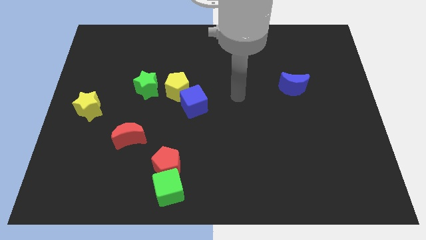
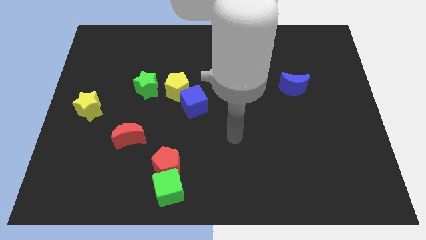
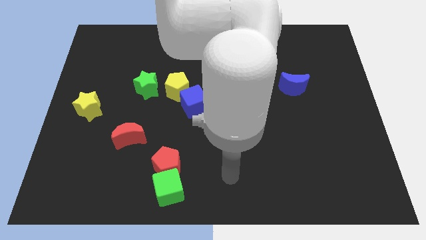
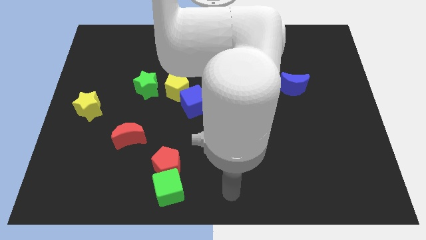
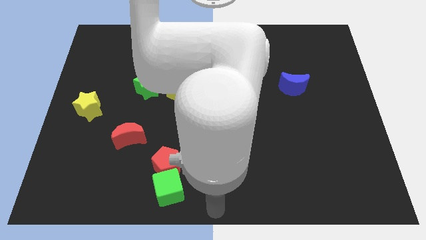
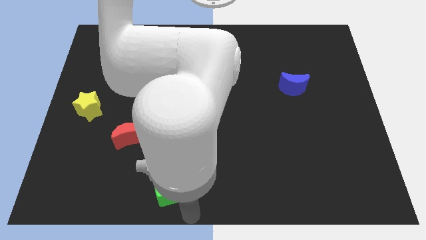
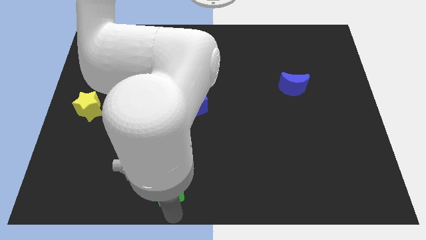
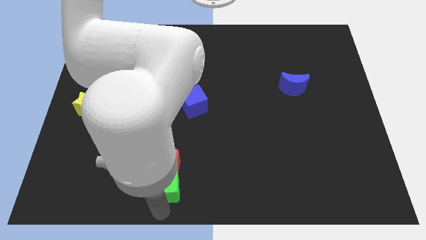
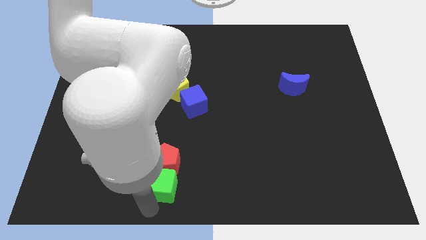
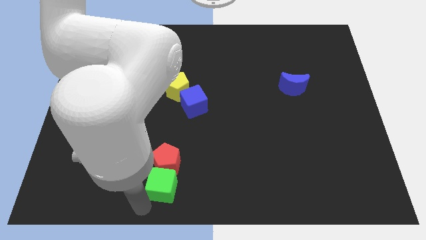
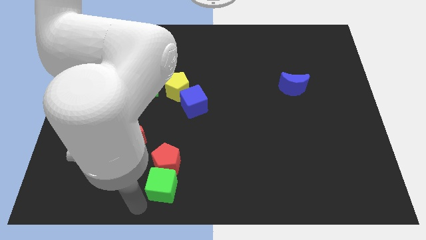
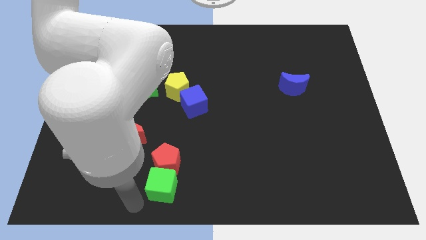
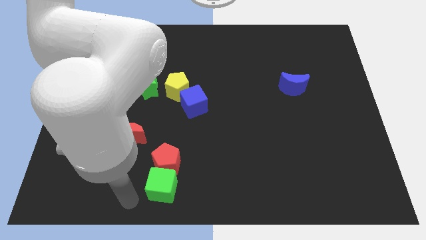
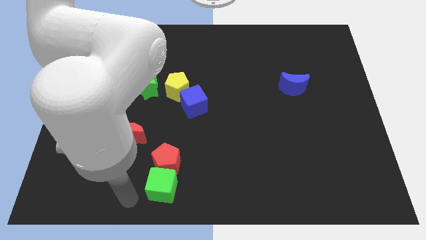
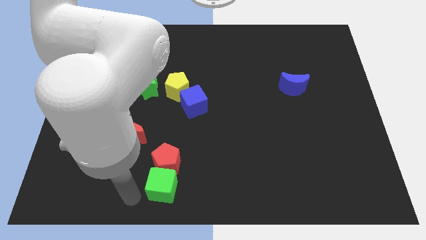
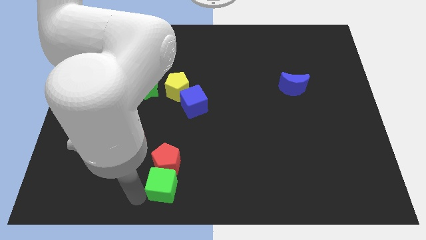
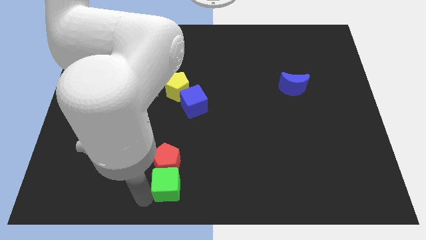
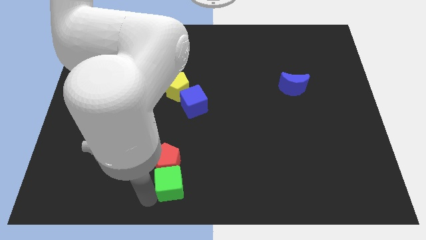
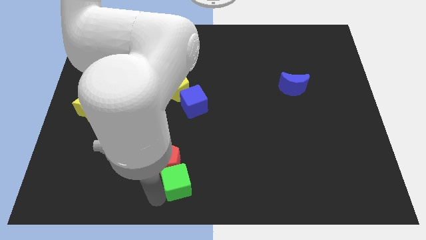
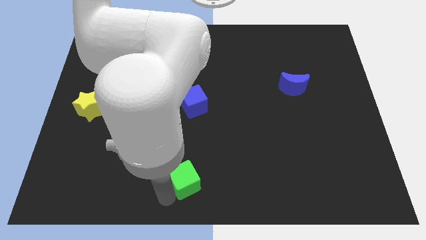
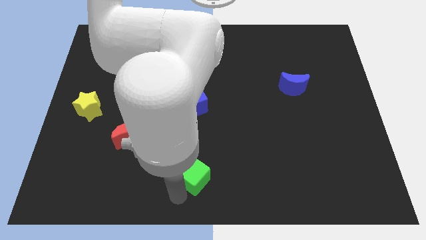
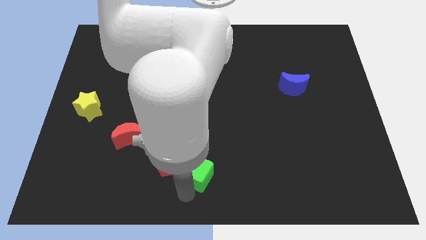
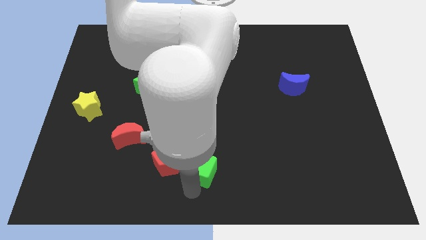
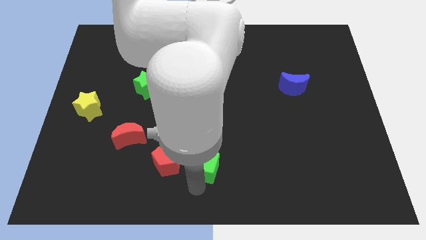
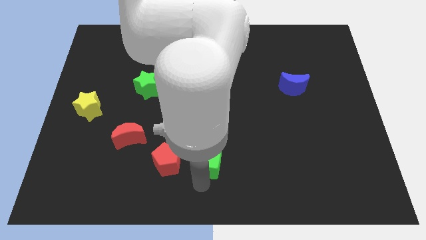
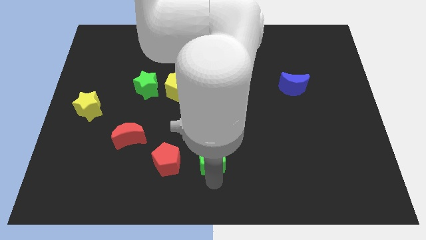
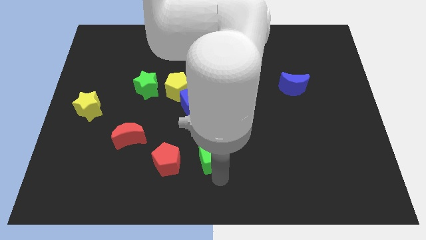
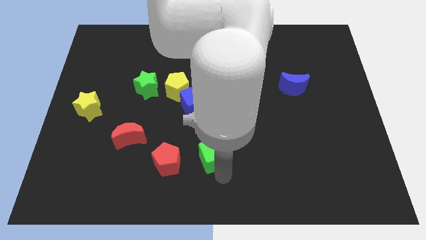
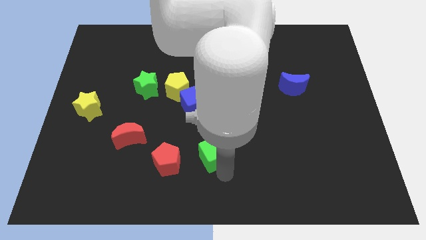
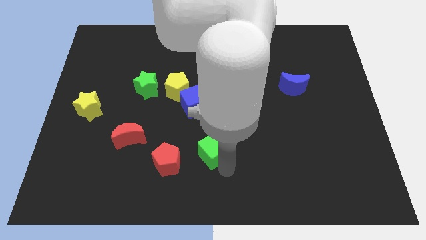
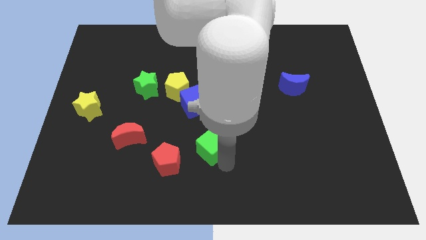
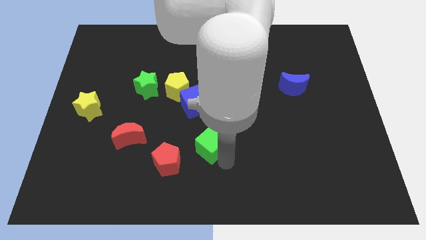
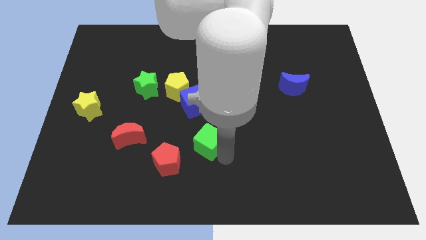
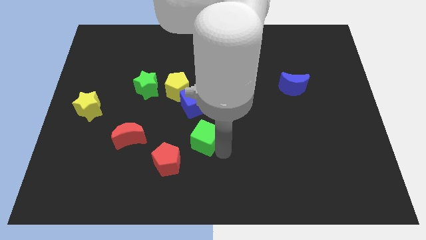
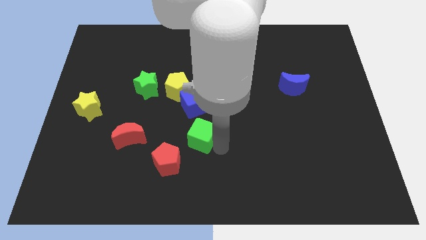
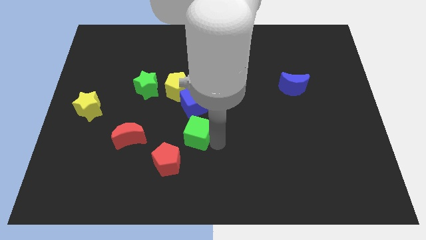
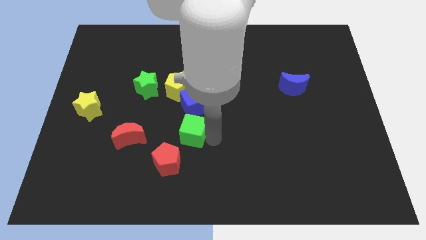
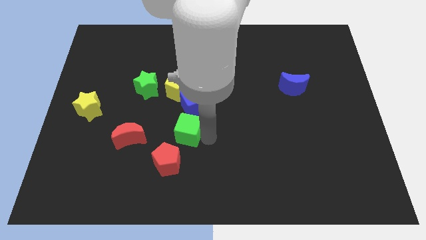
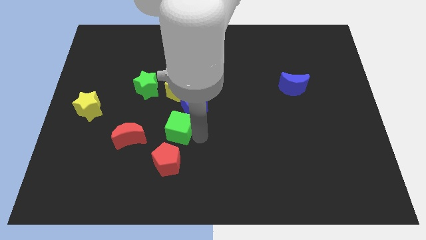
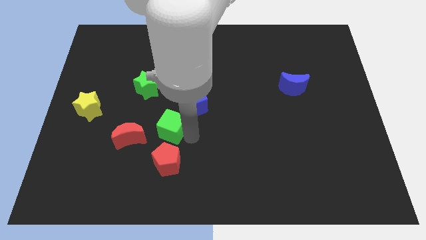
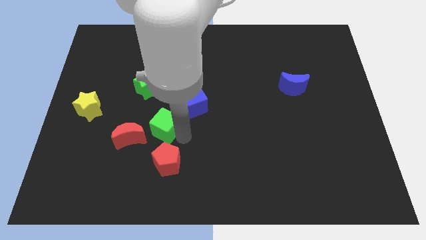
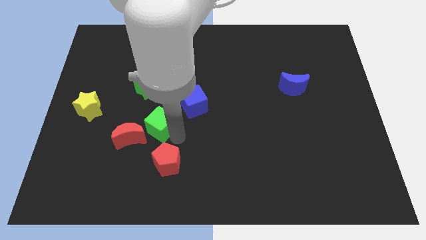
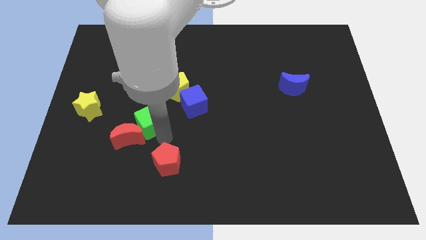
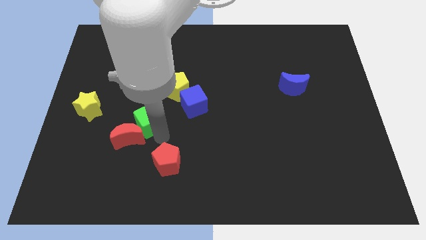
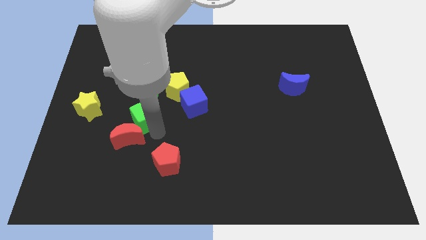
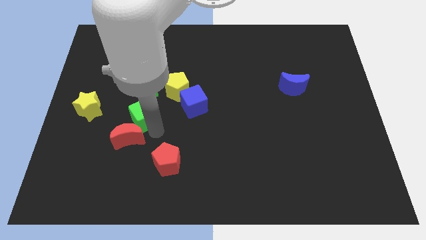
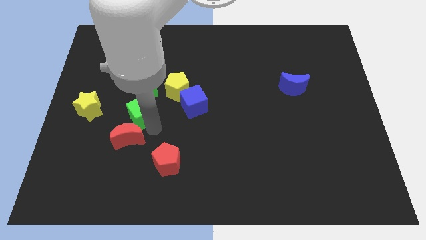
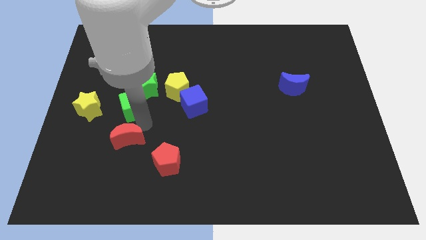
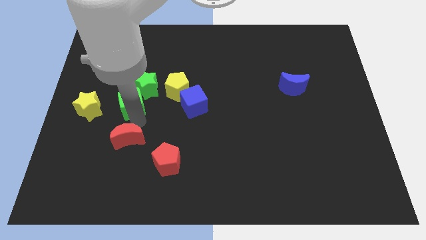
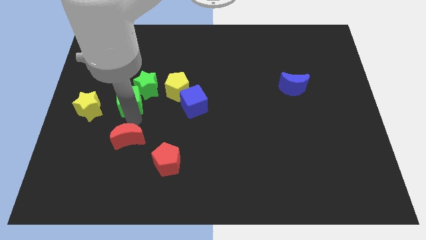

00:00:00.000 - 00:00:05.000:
move the green cube next to the green star

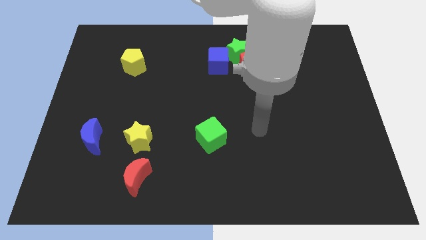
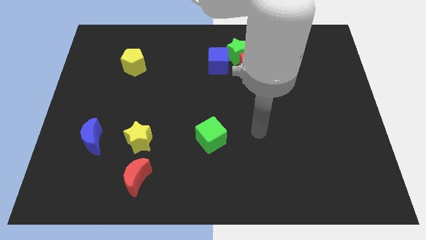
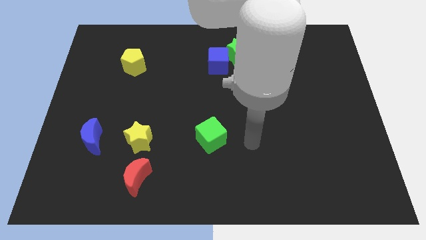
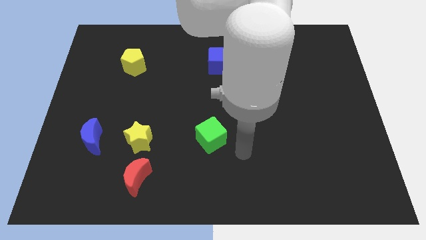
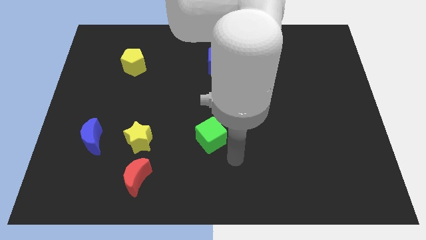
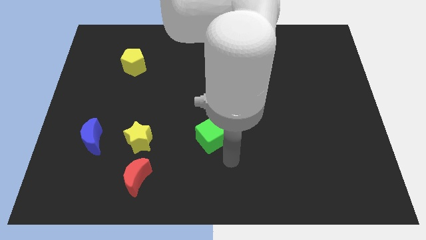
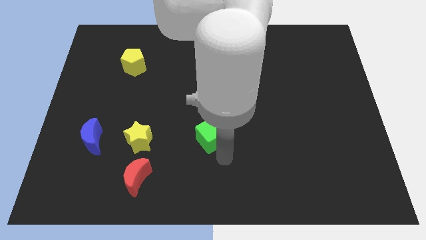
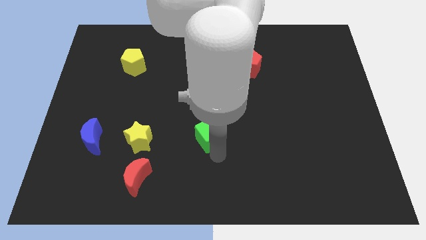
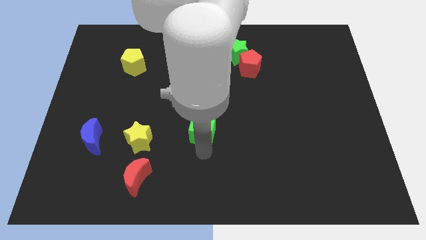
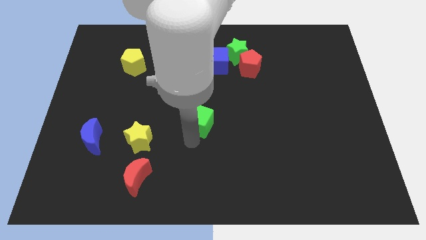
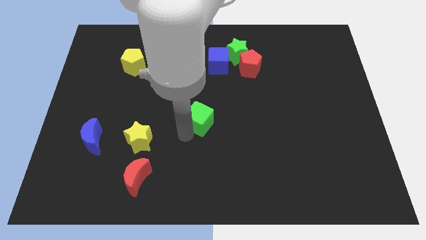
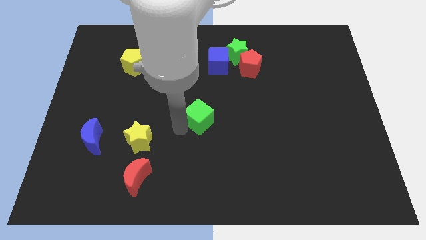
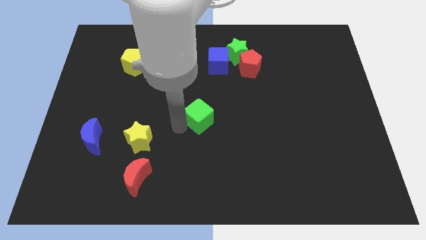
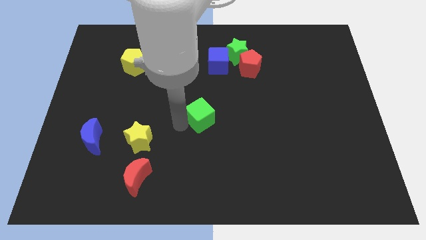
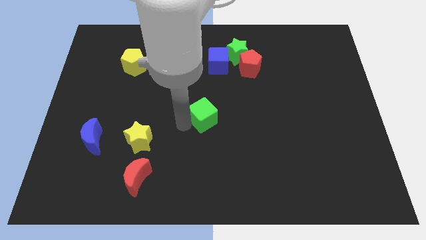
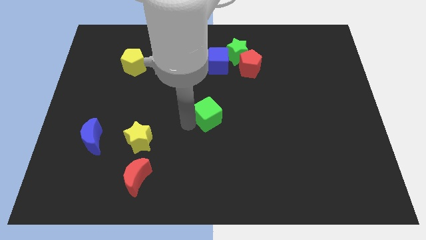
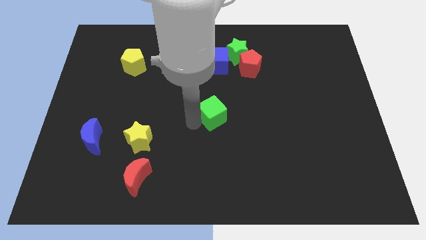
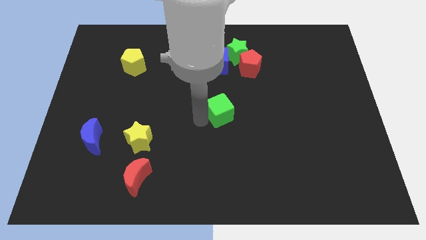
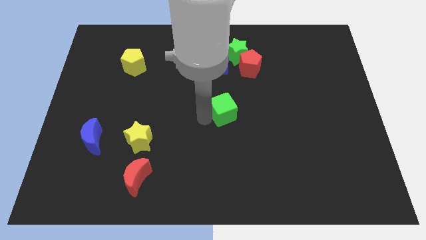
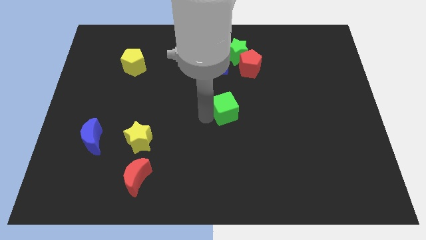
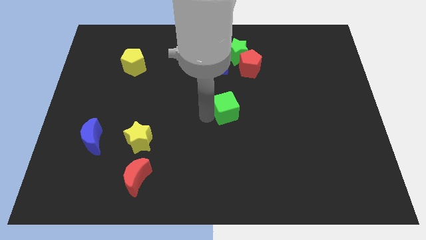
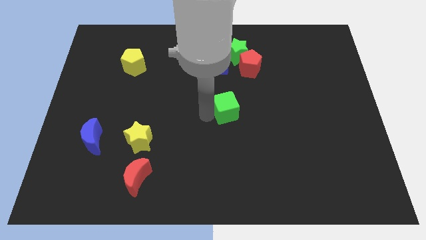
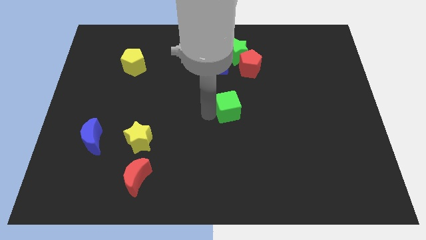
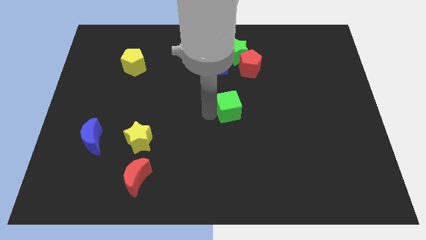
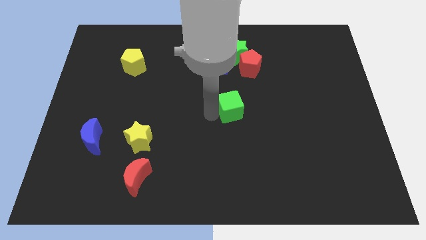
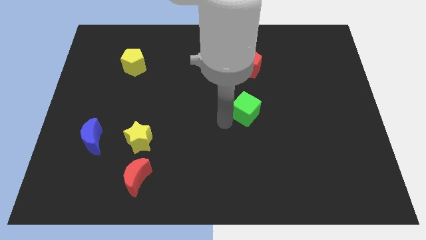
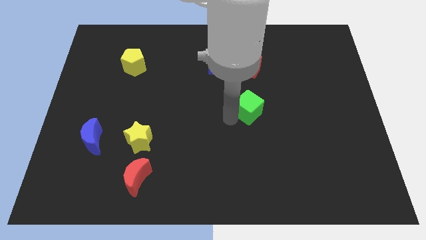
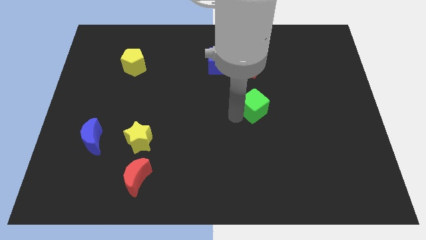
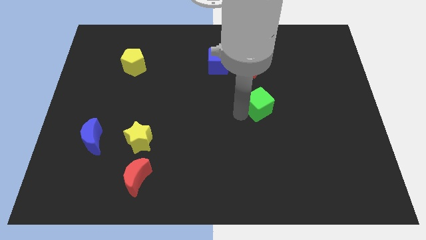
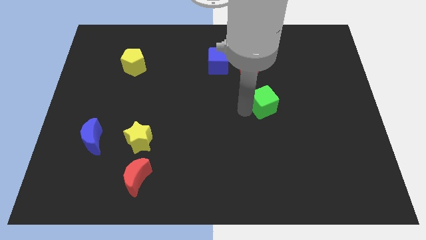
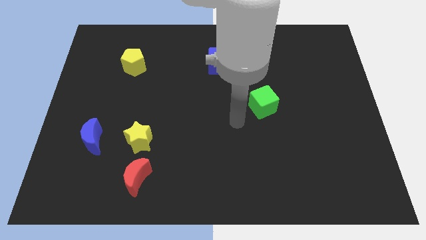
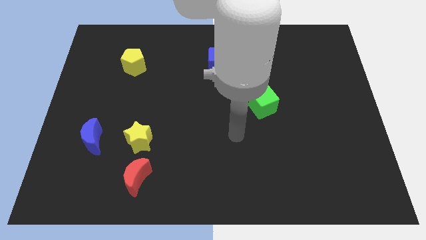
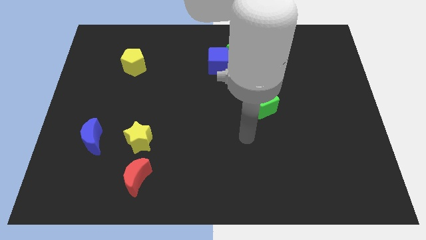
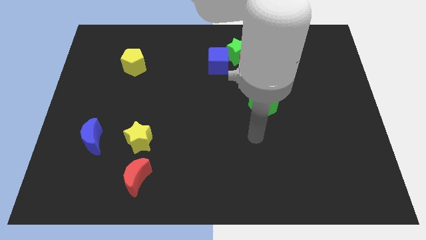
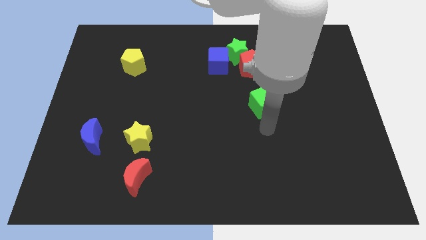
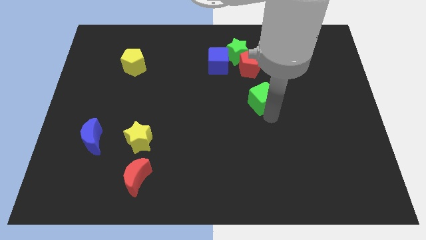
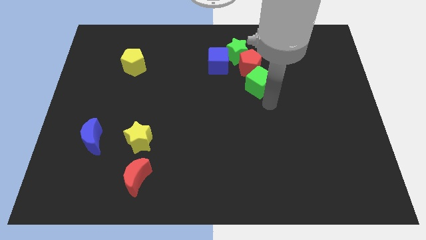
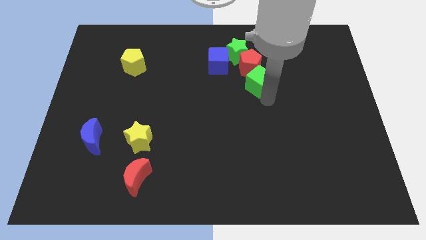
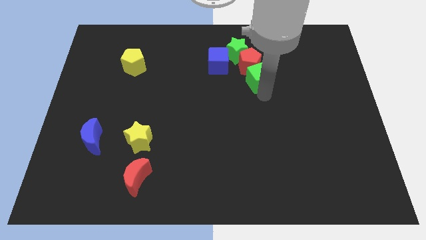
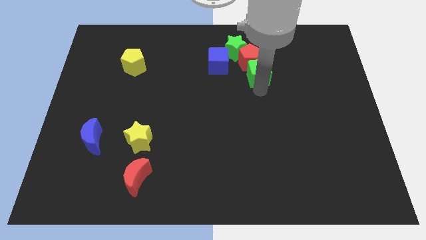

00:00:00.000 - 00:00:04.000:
move the green cube to the red pentagon
